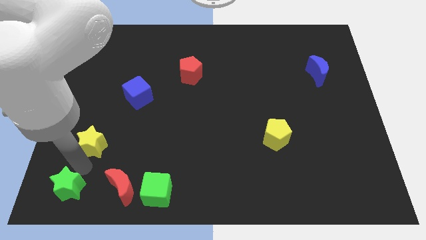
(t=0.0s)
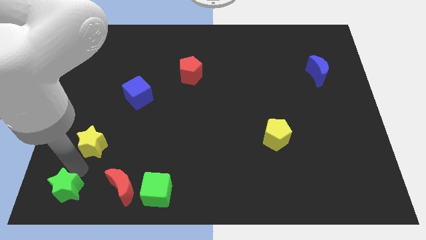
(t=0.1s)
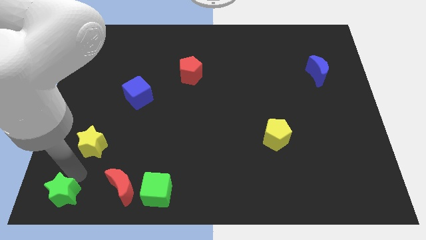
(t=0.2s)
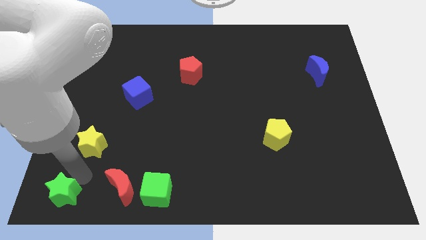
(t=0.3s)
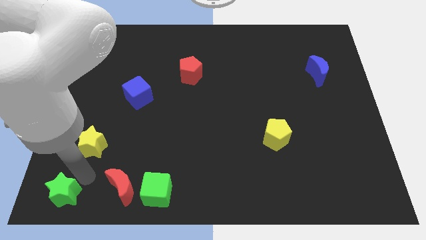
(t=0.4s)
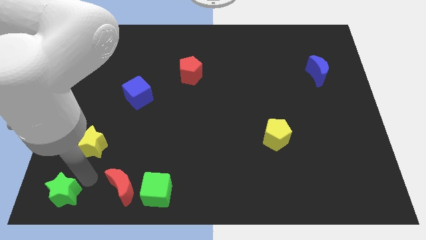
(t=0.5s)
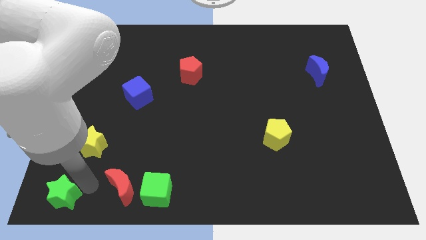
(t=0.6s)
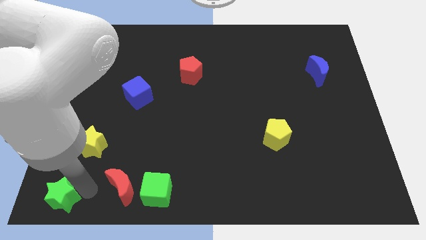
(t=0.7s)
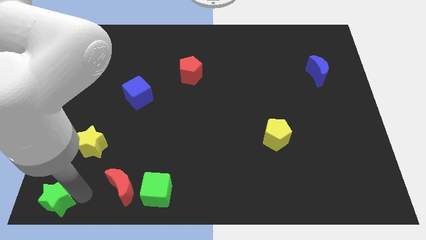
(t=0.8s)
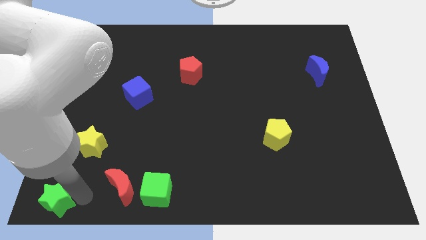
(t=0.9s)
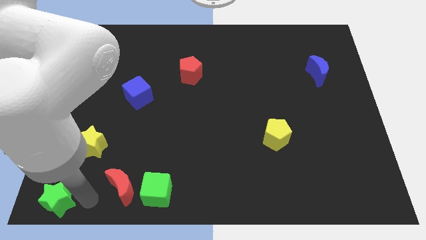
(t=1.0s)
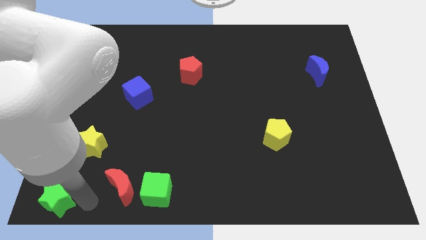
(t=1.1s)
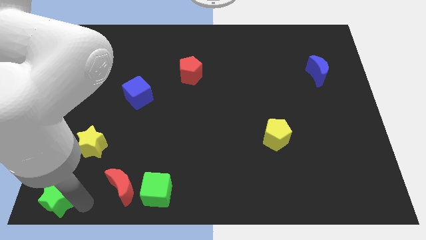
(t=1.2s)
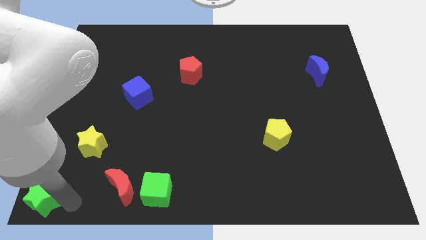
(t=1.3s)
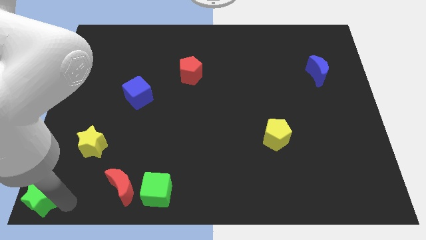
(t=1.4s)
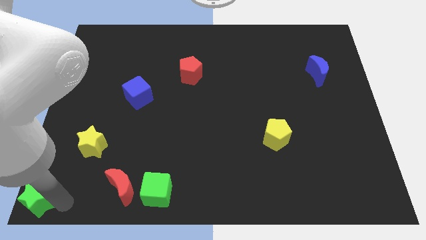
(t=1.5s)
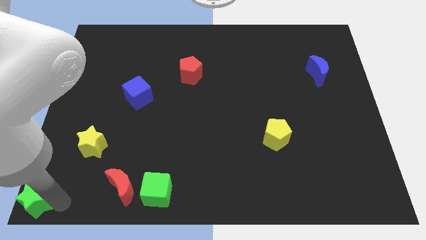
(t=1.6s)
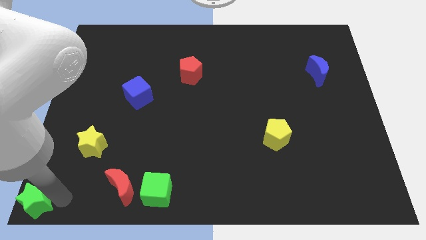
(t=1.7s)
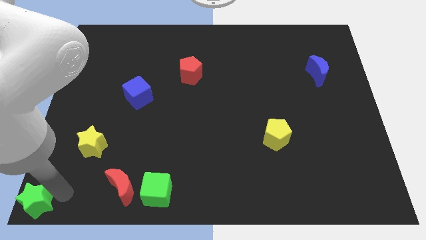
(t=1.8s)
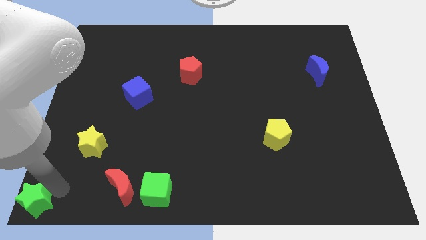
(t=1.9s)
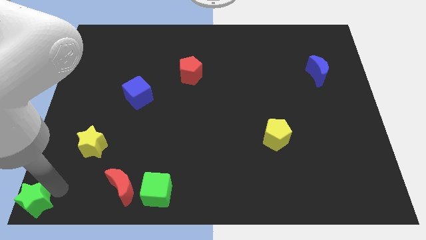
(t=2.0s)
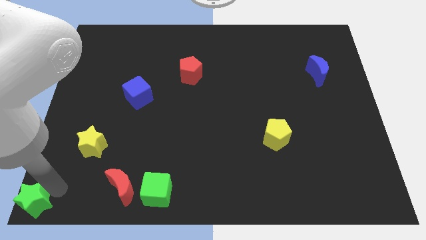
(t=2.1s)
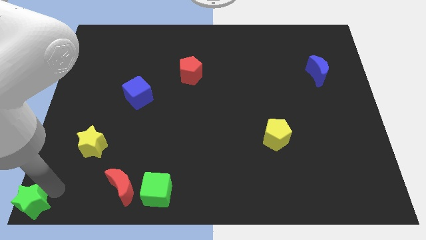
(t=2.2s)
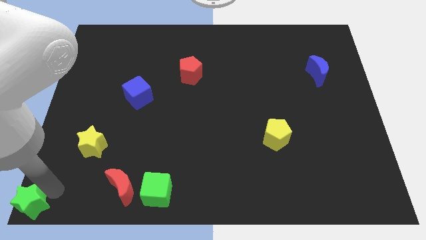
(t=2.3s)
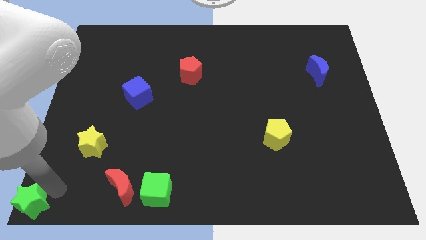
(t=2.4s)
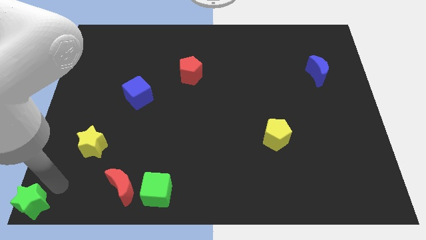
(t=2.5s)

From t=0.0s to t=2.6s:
push the green star to the bottom left corner of the board

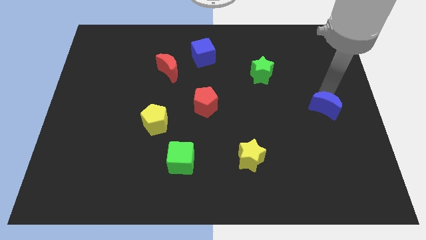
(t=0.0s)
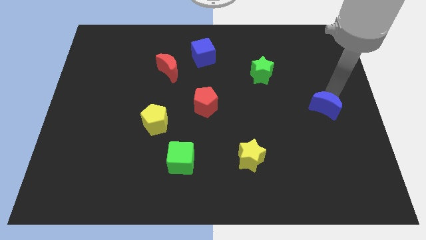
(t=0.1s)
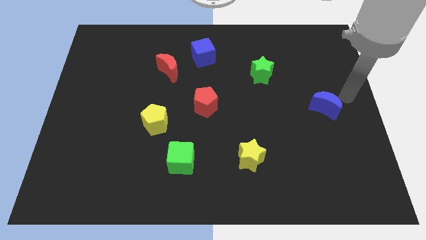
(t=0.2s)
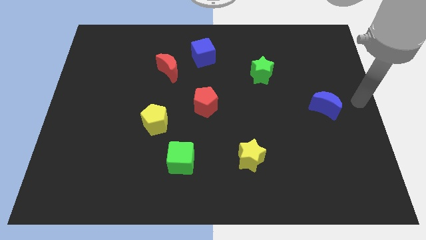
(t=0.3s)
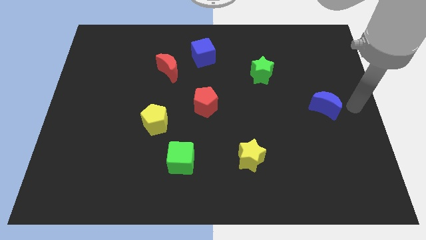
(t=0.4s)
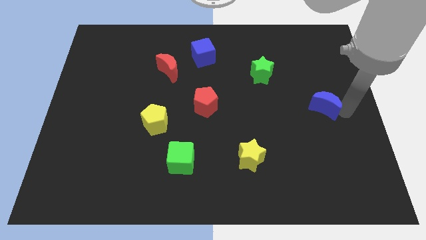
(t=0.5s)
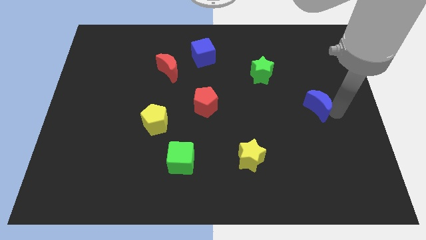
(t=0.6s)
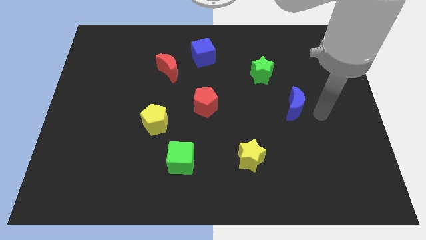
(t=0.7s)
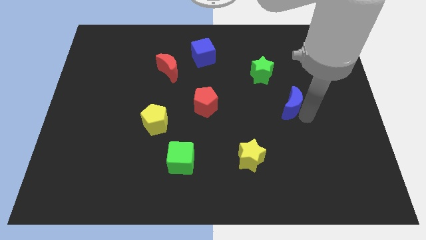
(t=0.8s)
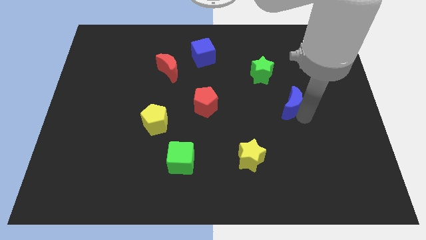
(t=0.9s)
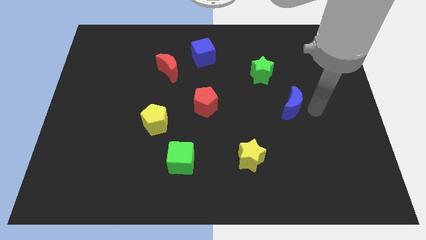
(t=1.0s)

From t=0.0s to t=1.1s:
move the blue crescent slightly to the left

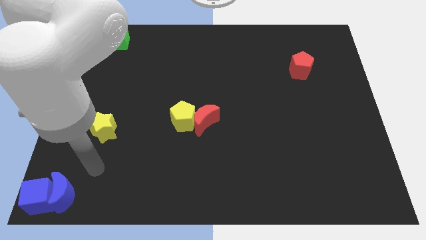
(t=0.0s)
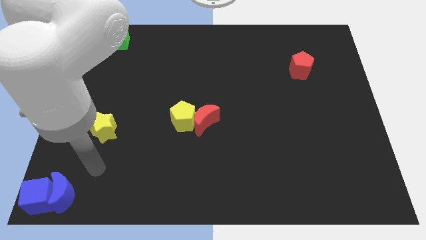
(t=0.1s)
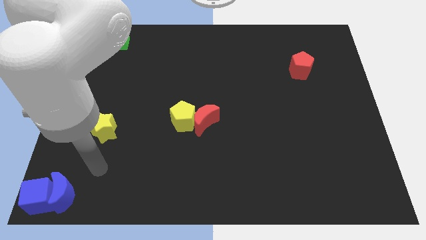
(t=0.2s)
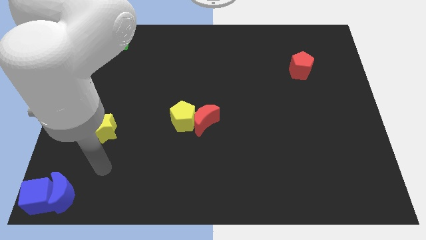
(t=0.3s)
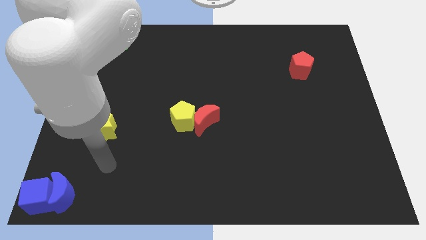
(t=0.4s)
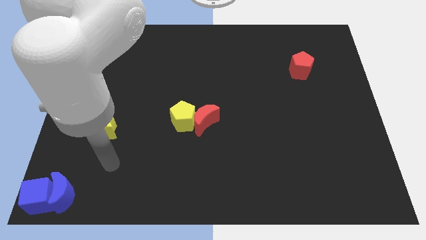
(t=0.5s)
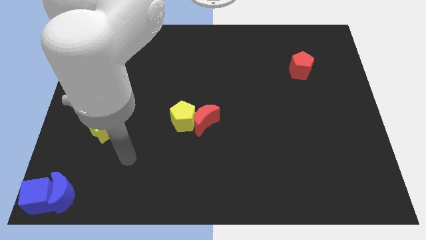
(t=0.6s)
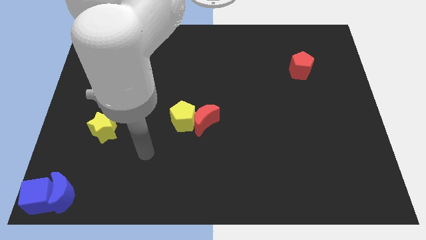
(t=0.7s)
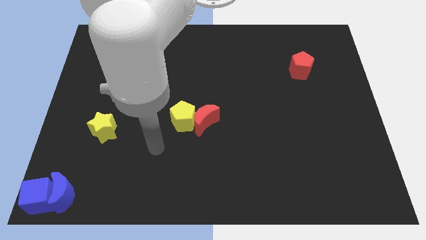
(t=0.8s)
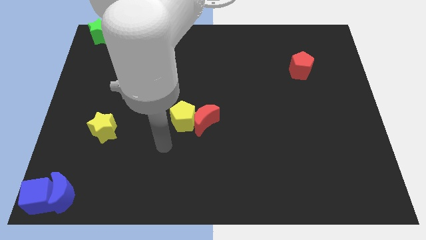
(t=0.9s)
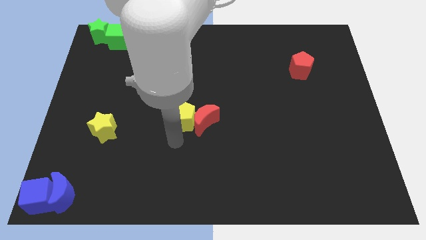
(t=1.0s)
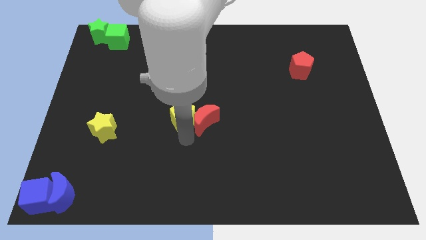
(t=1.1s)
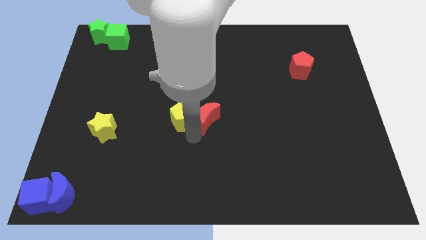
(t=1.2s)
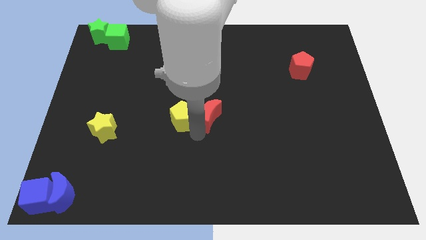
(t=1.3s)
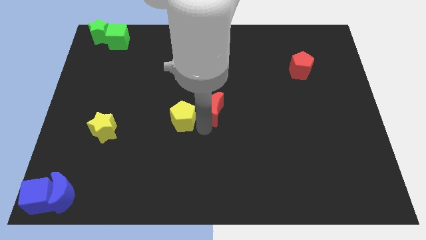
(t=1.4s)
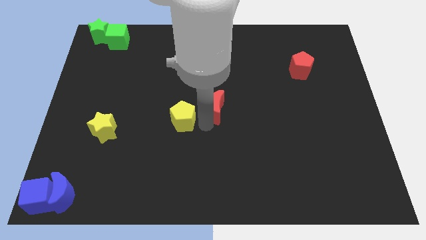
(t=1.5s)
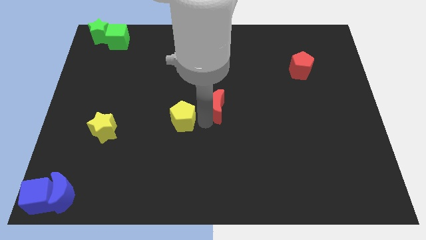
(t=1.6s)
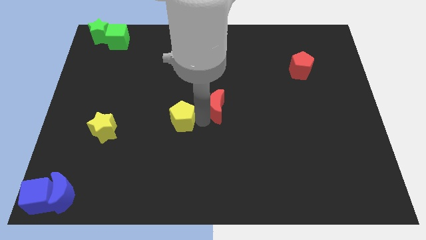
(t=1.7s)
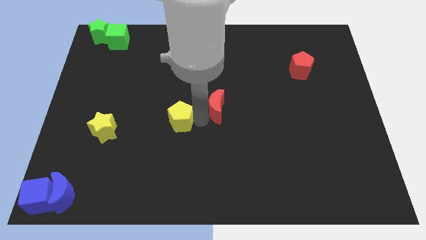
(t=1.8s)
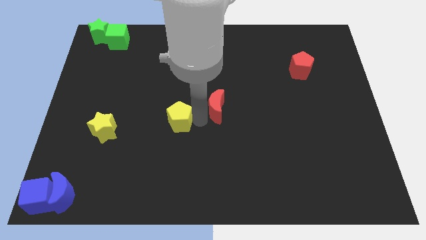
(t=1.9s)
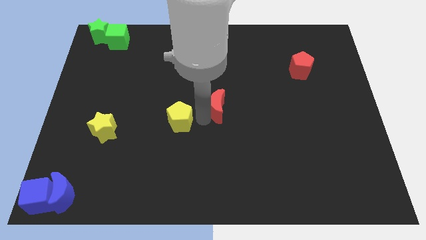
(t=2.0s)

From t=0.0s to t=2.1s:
separate the red crescent from the yellow pentagon

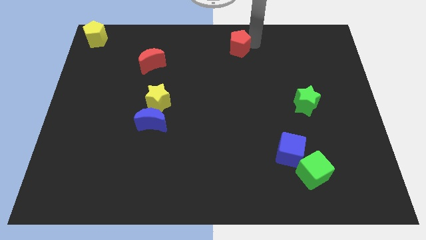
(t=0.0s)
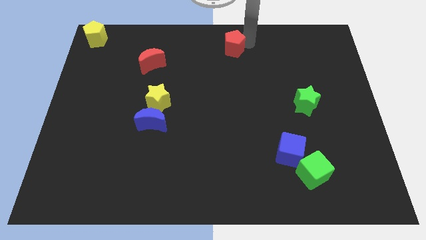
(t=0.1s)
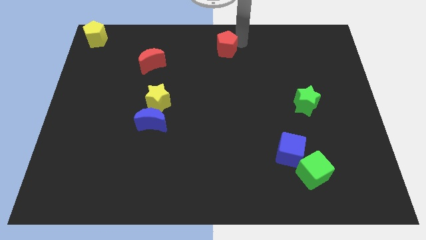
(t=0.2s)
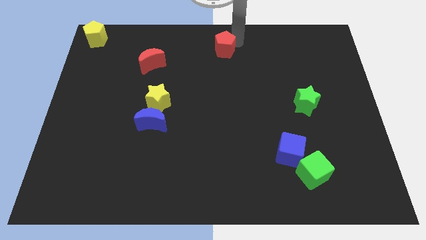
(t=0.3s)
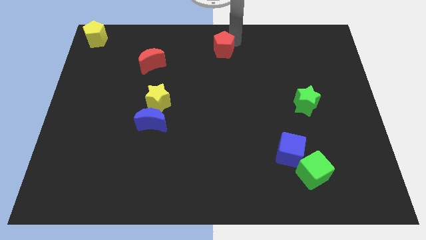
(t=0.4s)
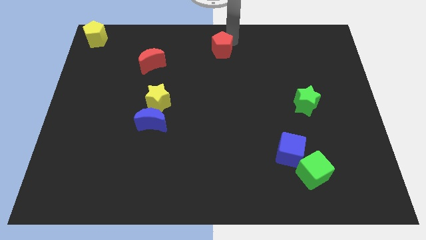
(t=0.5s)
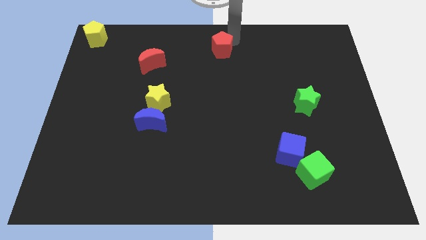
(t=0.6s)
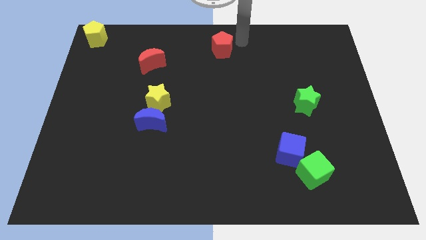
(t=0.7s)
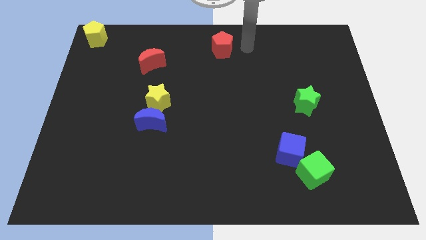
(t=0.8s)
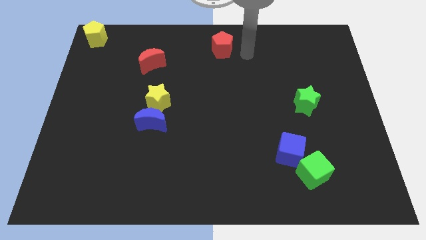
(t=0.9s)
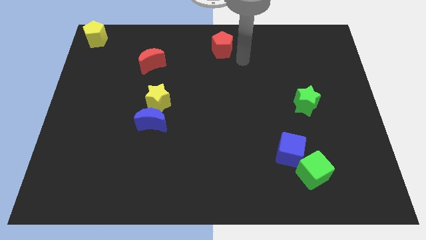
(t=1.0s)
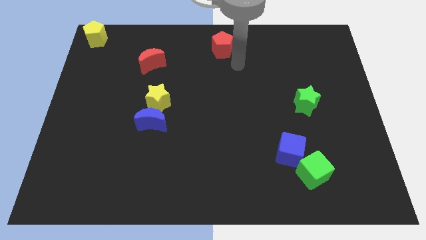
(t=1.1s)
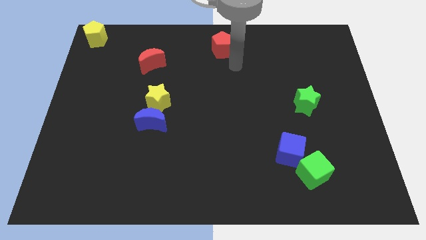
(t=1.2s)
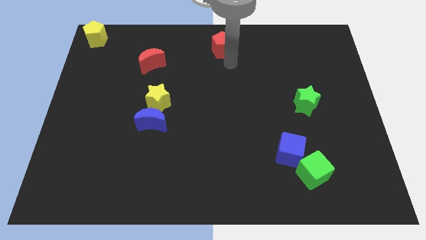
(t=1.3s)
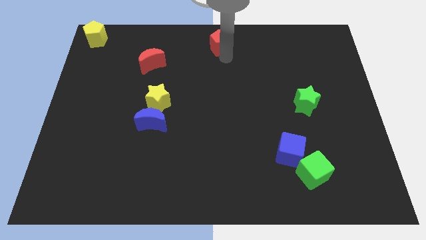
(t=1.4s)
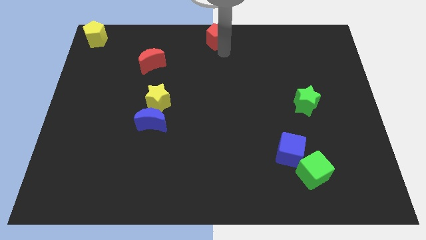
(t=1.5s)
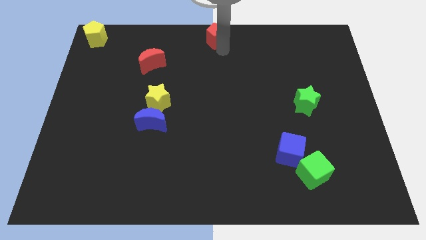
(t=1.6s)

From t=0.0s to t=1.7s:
place the red pentagon at the top center of the board

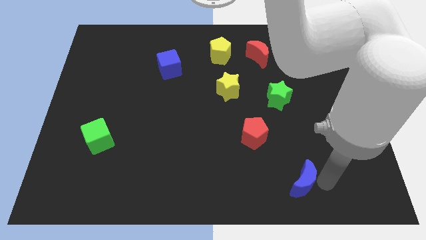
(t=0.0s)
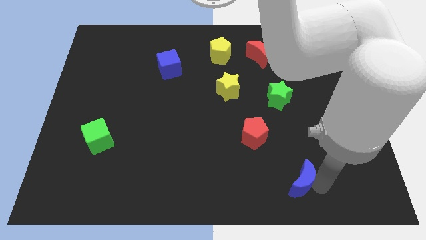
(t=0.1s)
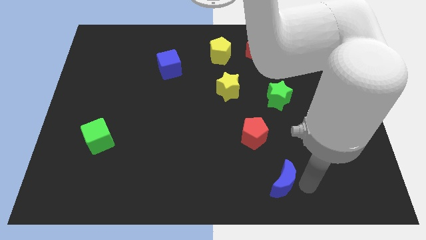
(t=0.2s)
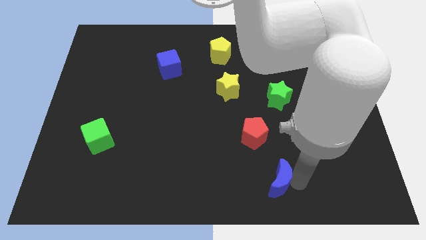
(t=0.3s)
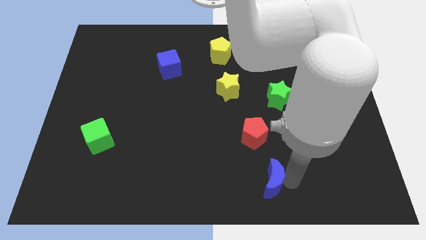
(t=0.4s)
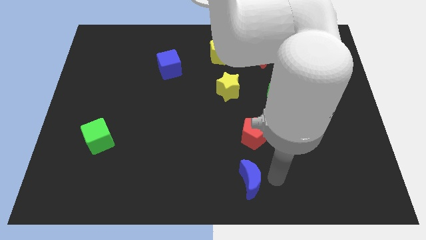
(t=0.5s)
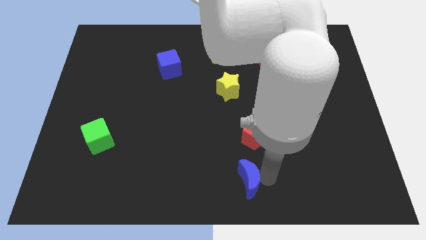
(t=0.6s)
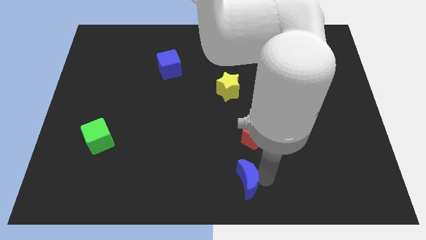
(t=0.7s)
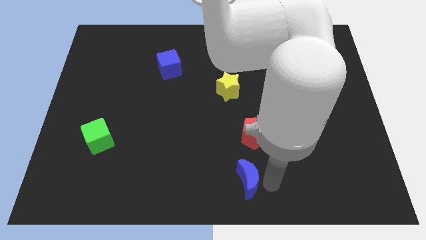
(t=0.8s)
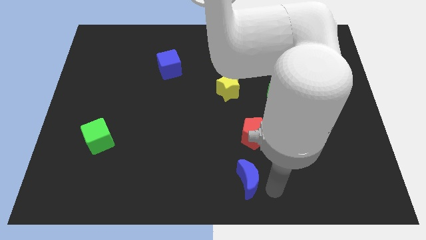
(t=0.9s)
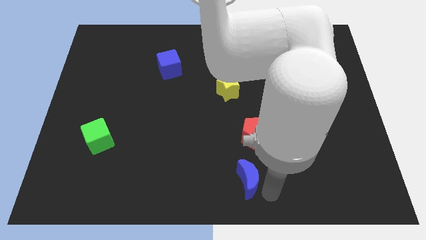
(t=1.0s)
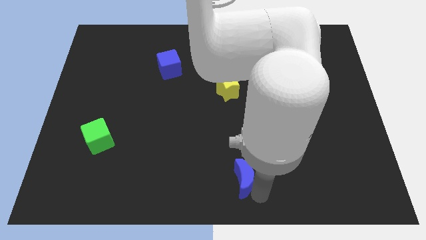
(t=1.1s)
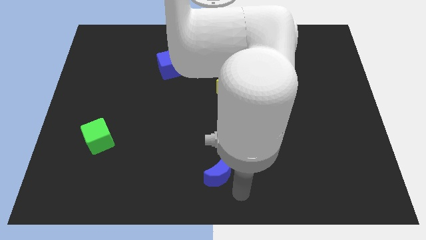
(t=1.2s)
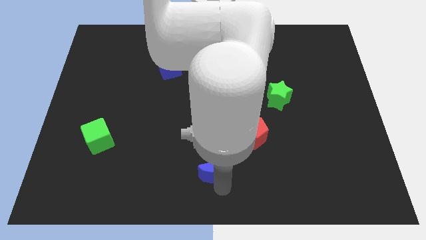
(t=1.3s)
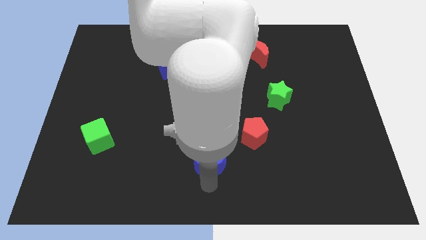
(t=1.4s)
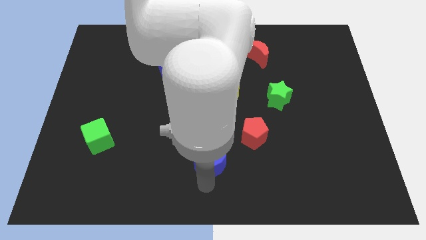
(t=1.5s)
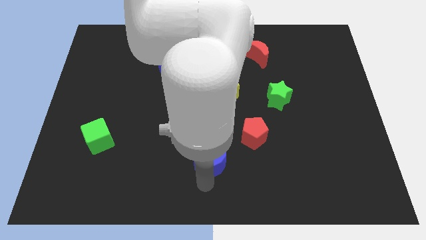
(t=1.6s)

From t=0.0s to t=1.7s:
drag blue moon towards left
